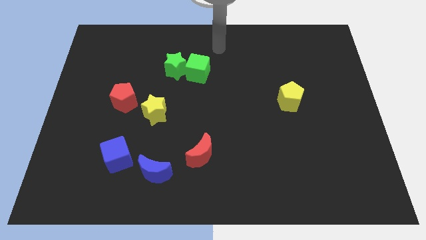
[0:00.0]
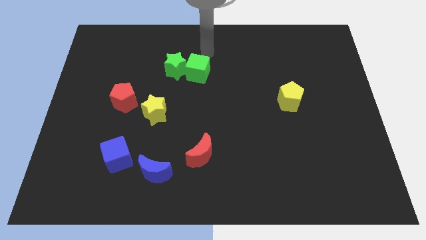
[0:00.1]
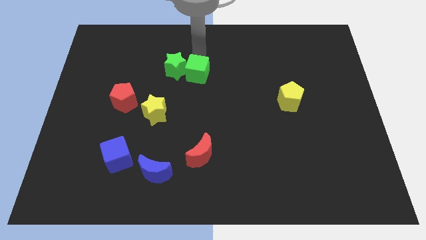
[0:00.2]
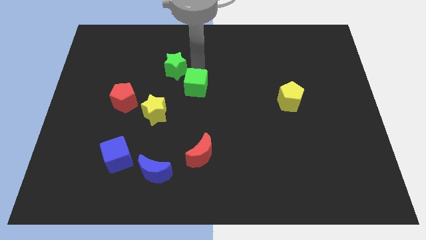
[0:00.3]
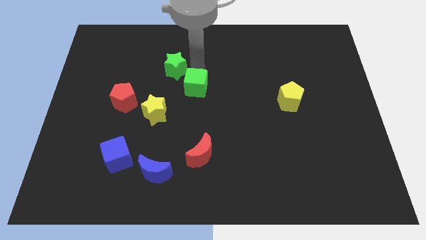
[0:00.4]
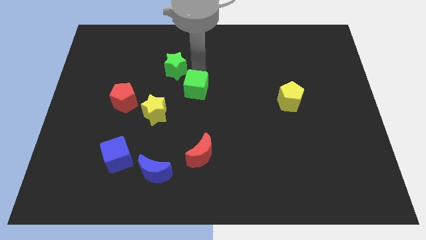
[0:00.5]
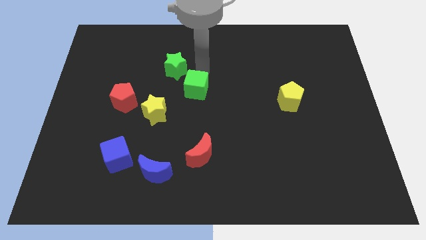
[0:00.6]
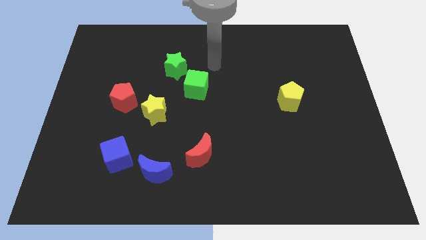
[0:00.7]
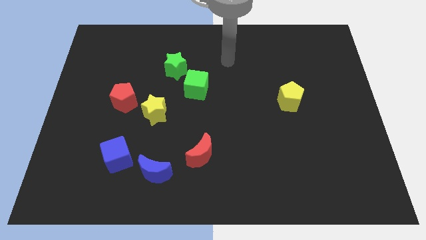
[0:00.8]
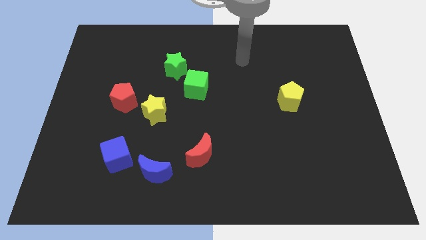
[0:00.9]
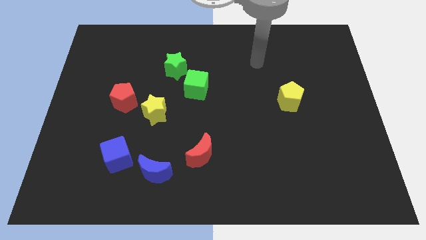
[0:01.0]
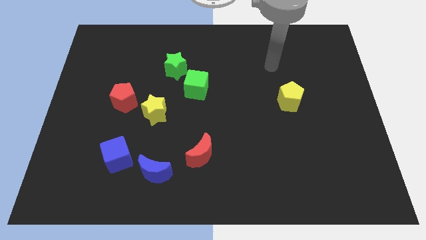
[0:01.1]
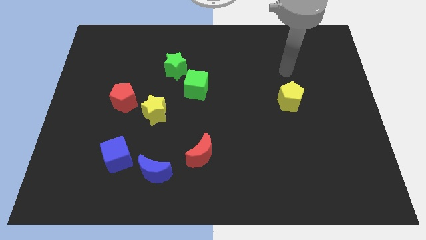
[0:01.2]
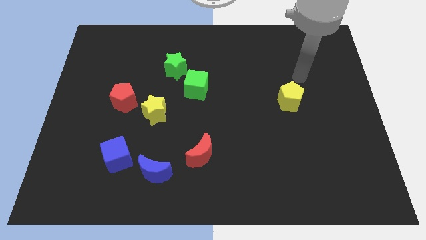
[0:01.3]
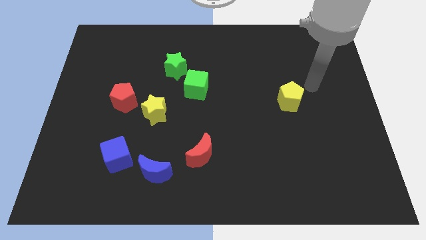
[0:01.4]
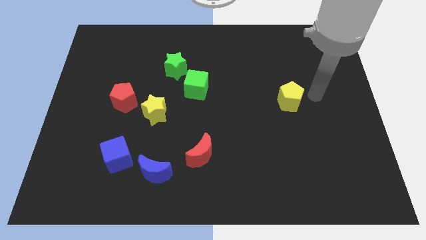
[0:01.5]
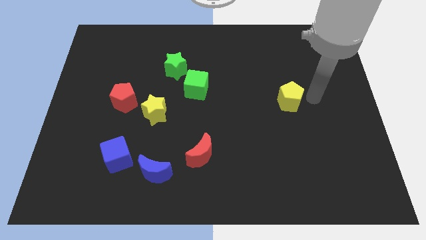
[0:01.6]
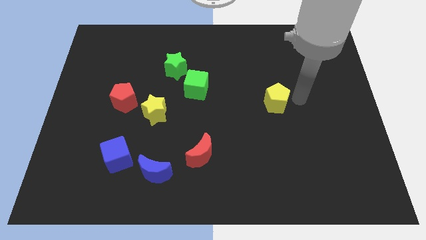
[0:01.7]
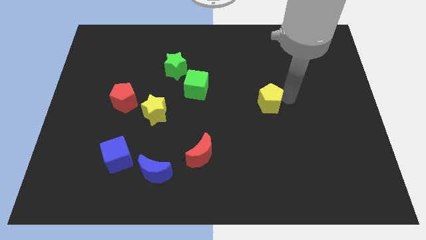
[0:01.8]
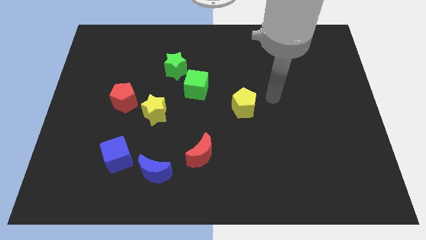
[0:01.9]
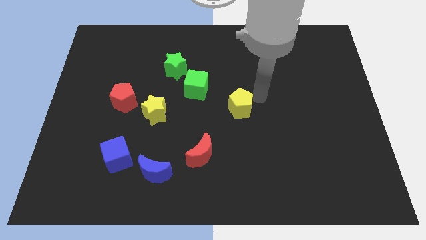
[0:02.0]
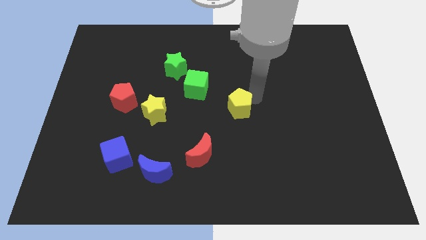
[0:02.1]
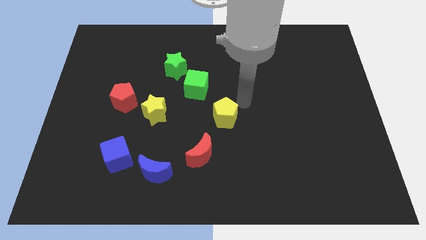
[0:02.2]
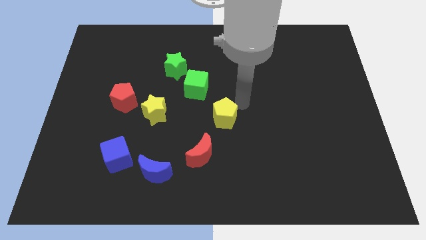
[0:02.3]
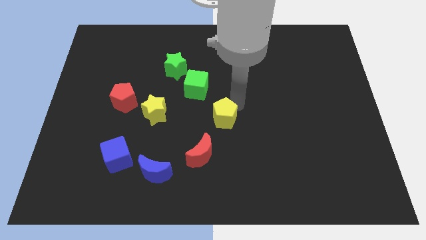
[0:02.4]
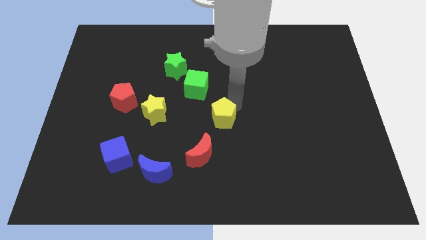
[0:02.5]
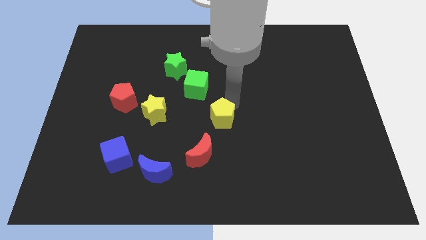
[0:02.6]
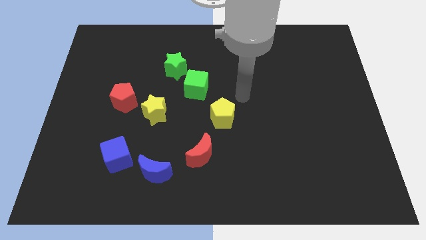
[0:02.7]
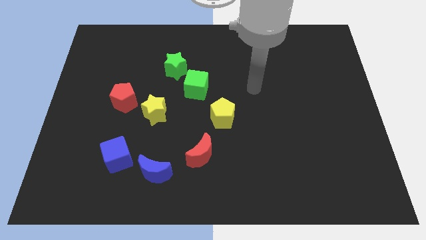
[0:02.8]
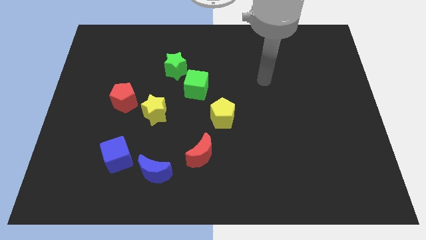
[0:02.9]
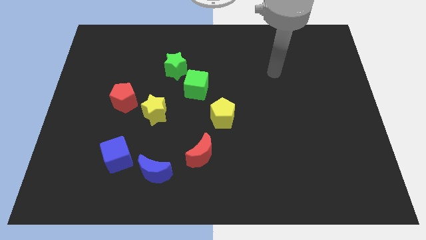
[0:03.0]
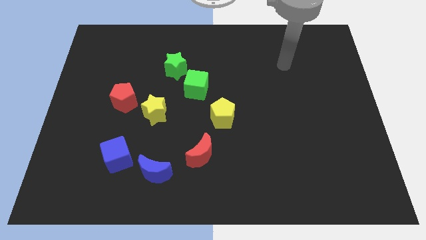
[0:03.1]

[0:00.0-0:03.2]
push green cube and yellow pentagon towards center

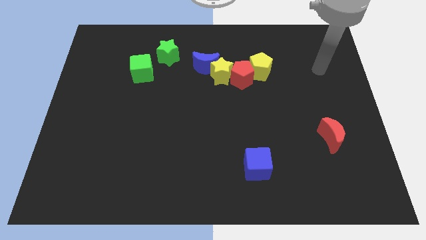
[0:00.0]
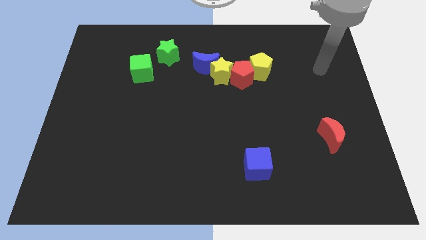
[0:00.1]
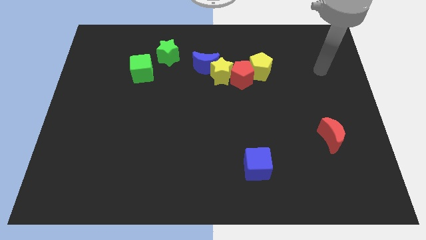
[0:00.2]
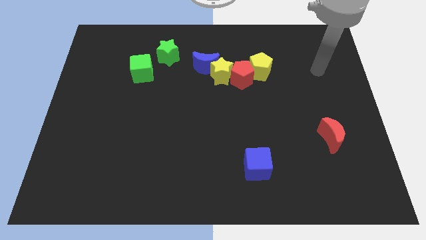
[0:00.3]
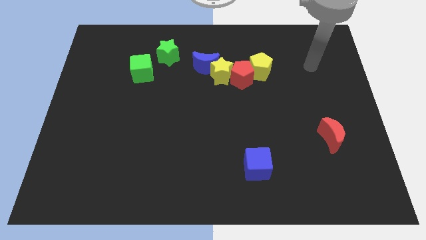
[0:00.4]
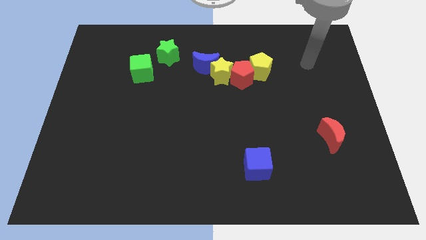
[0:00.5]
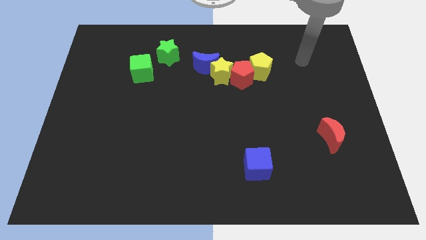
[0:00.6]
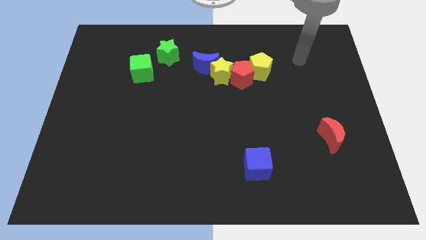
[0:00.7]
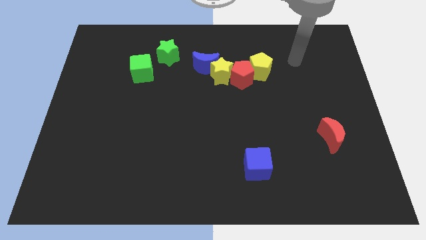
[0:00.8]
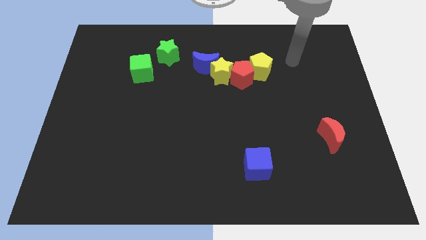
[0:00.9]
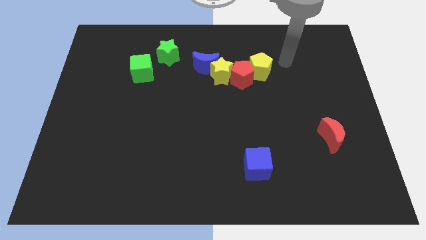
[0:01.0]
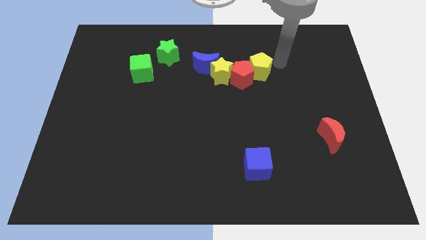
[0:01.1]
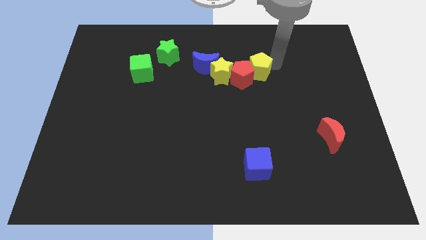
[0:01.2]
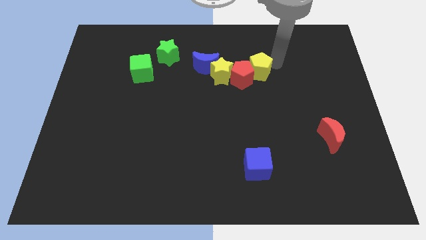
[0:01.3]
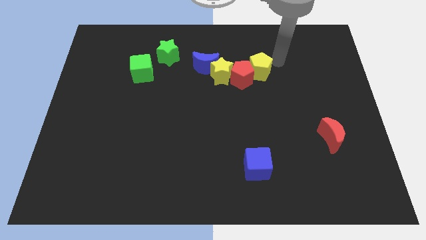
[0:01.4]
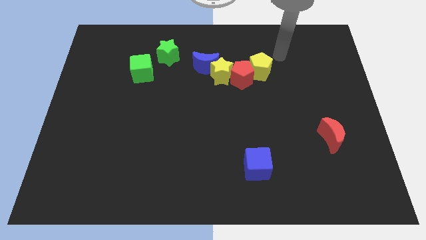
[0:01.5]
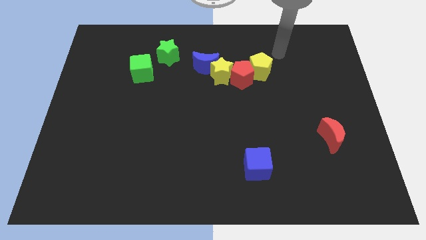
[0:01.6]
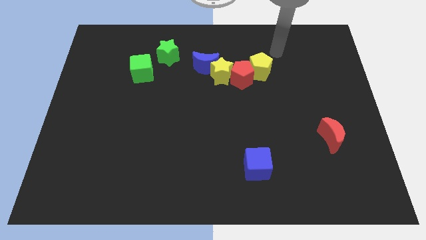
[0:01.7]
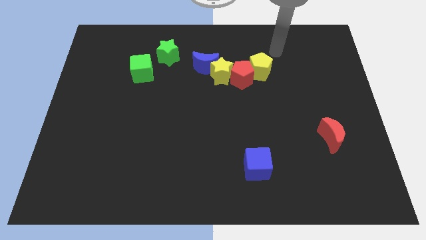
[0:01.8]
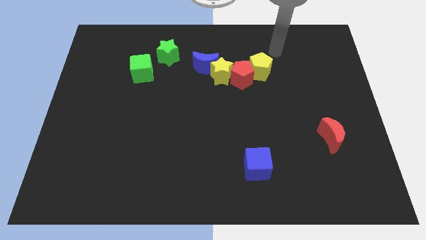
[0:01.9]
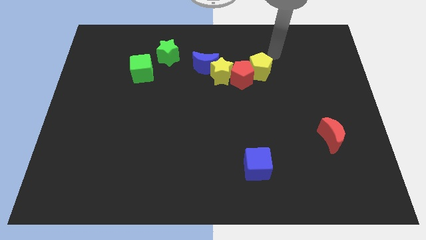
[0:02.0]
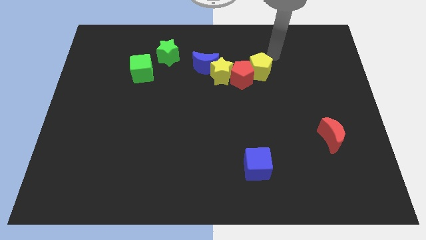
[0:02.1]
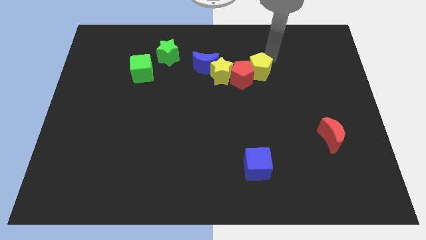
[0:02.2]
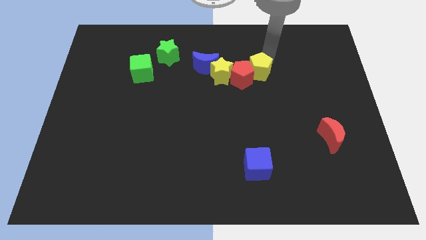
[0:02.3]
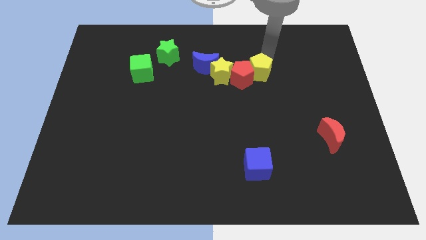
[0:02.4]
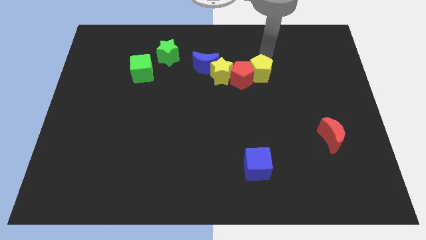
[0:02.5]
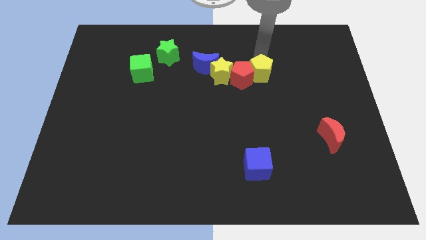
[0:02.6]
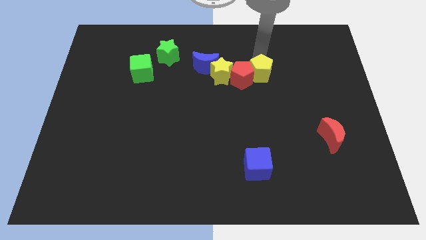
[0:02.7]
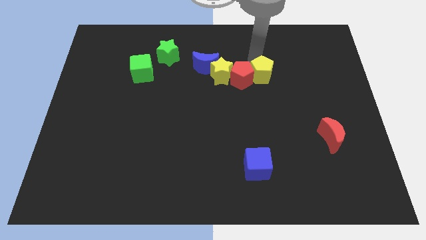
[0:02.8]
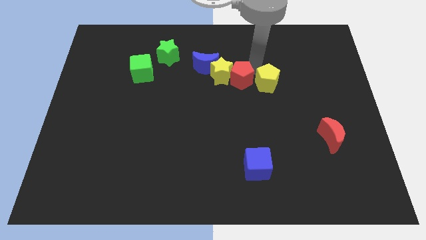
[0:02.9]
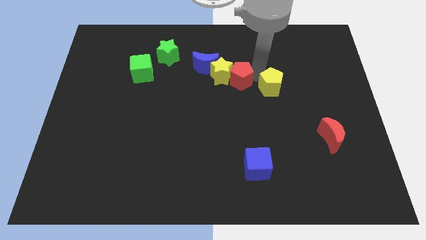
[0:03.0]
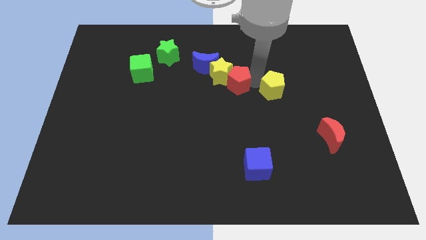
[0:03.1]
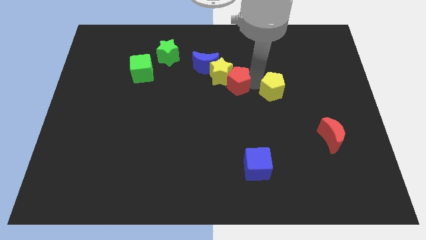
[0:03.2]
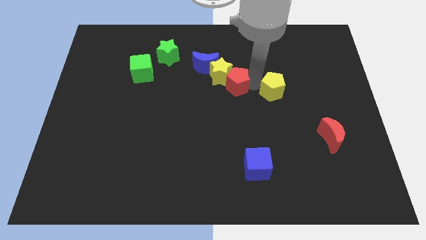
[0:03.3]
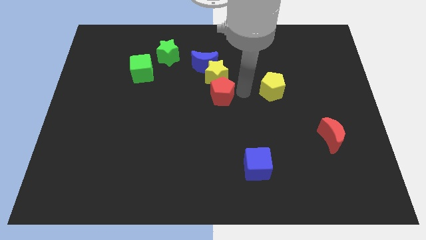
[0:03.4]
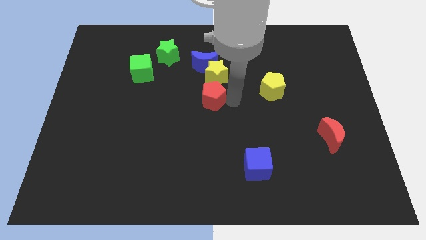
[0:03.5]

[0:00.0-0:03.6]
separate both the pentagons from each other

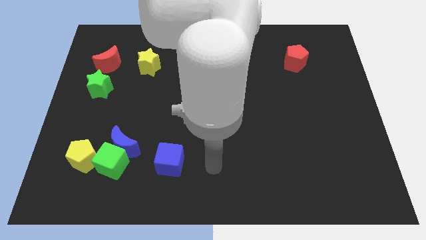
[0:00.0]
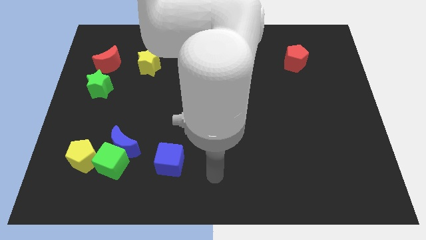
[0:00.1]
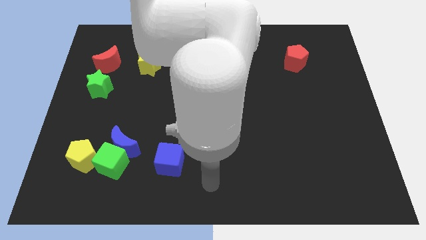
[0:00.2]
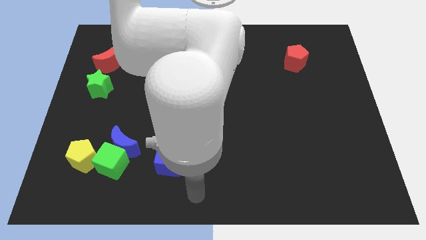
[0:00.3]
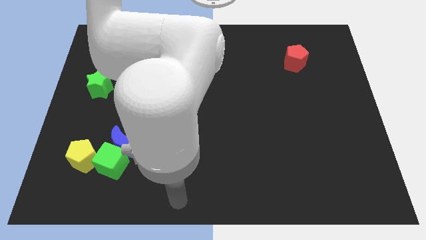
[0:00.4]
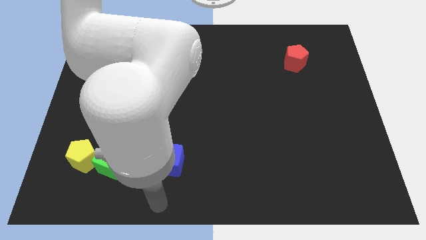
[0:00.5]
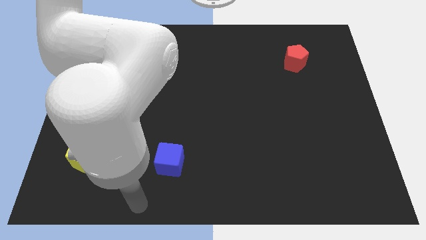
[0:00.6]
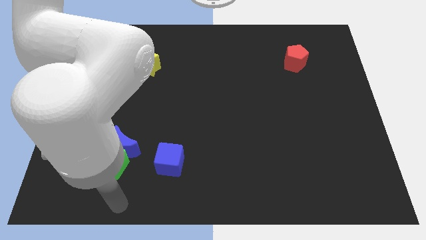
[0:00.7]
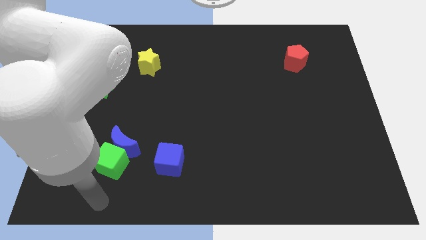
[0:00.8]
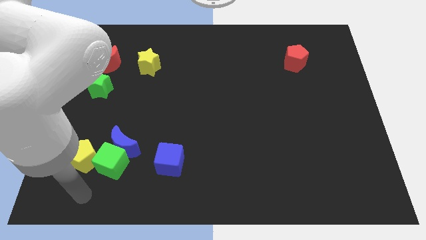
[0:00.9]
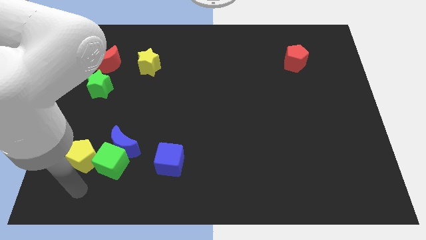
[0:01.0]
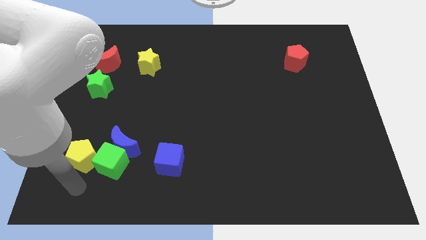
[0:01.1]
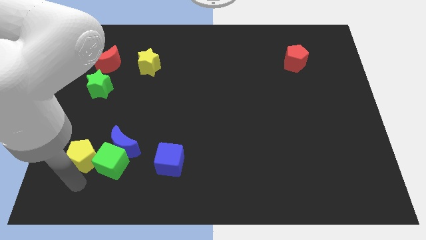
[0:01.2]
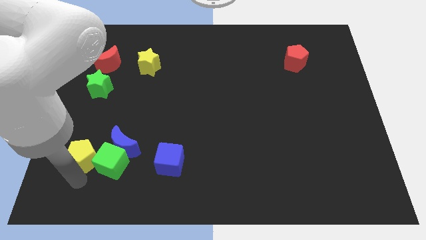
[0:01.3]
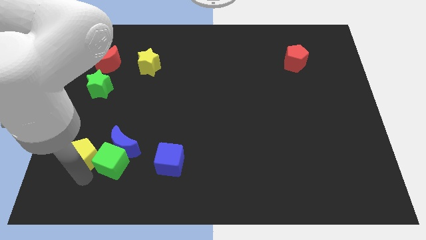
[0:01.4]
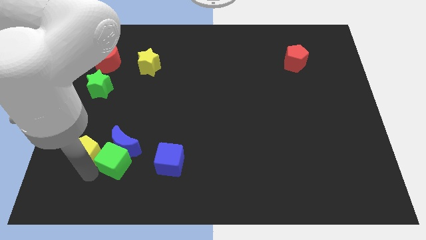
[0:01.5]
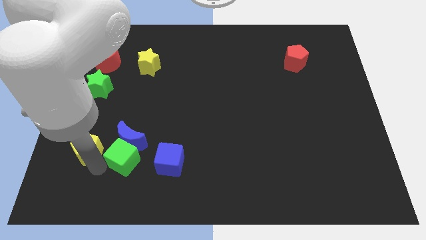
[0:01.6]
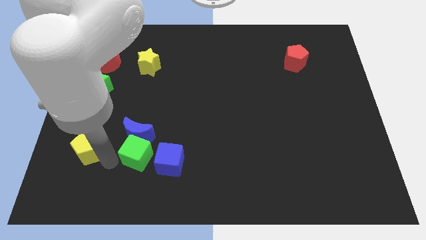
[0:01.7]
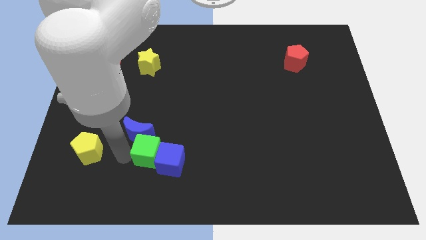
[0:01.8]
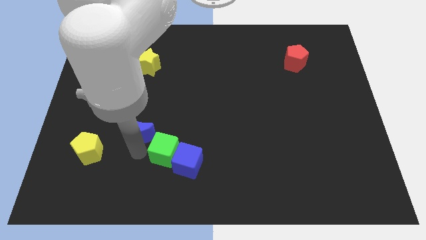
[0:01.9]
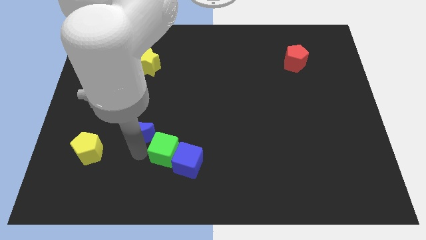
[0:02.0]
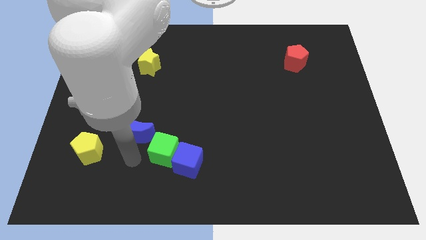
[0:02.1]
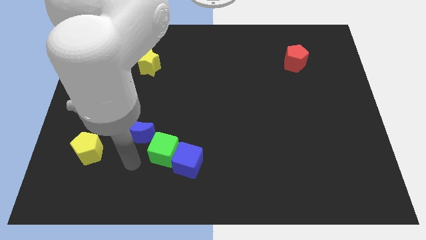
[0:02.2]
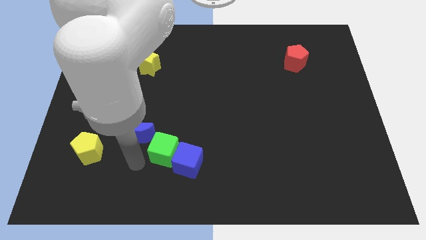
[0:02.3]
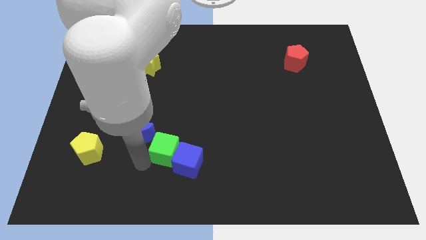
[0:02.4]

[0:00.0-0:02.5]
push the green cube in between the blue cube and blue crescent
